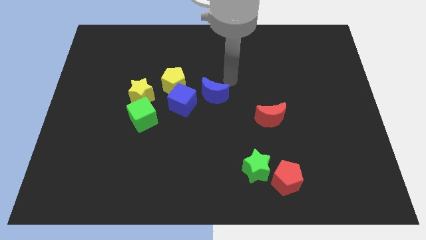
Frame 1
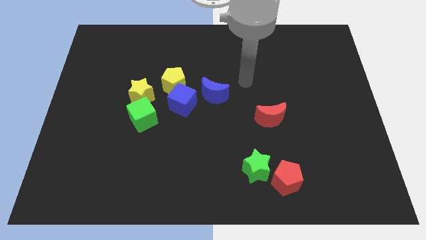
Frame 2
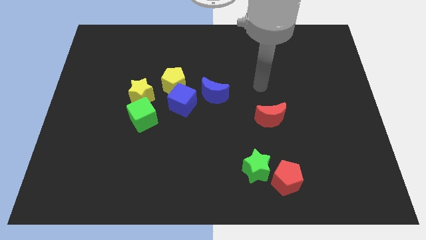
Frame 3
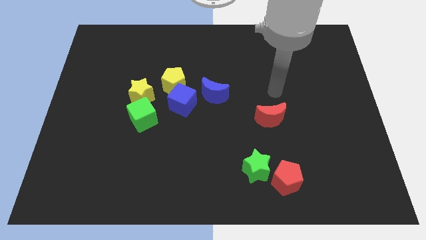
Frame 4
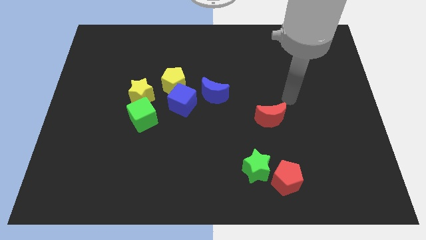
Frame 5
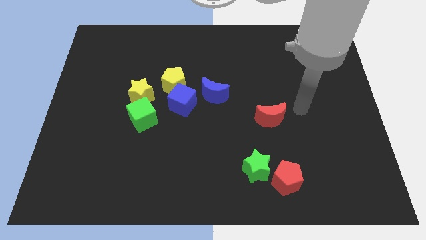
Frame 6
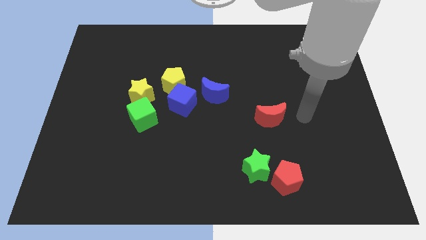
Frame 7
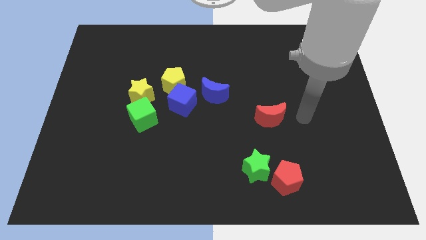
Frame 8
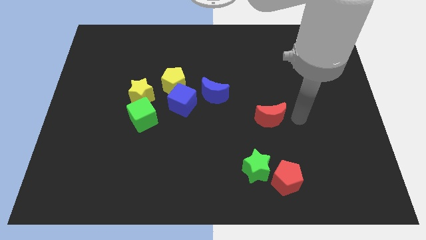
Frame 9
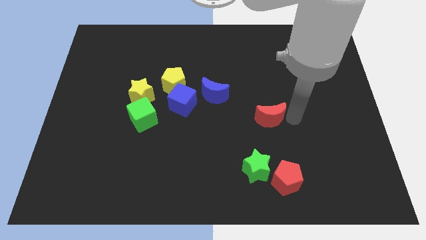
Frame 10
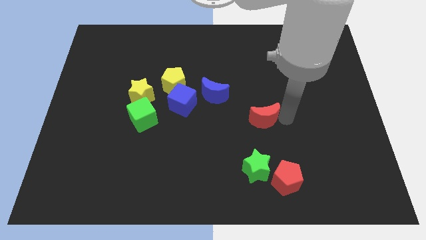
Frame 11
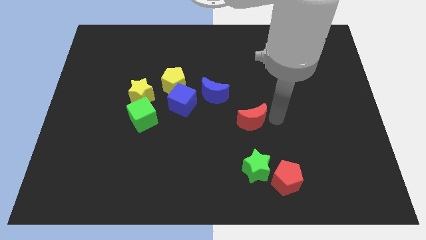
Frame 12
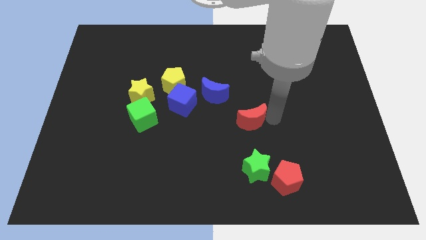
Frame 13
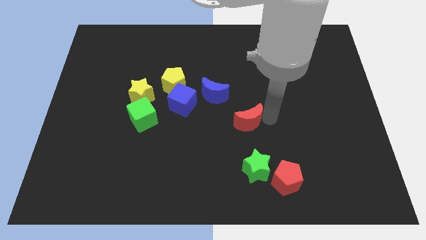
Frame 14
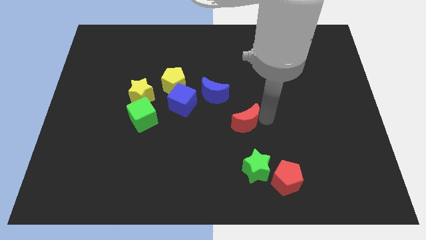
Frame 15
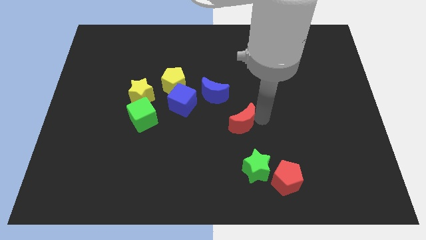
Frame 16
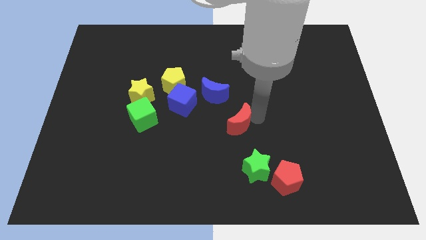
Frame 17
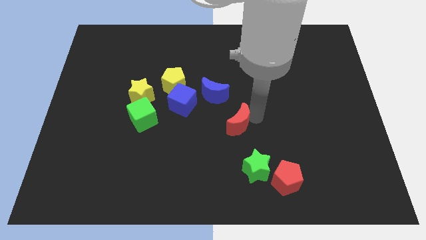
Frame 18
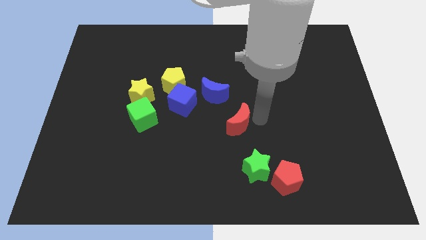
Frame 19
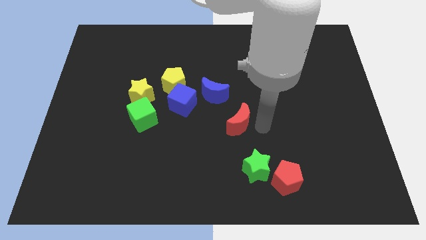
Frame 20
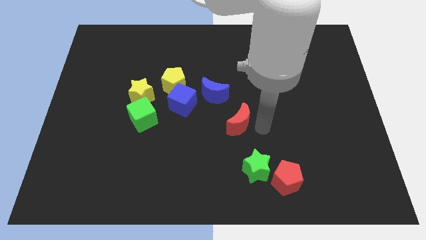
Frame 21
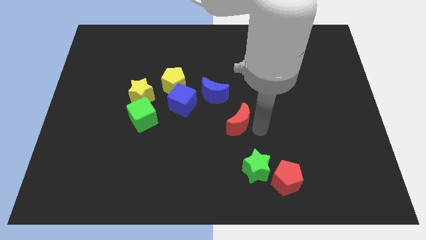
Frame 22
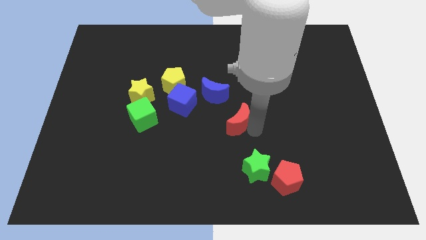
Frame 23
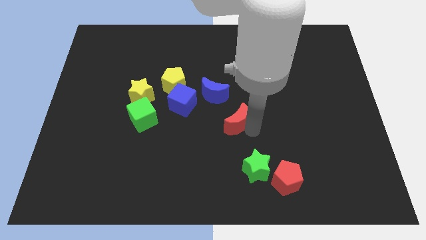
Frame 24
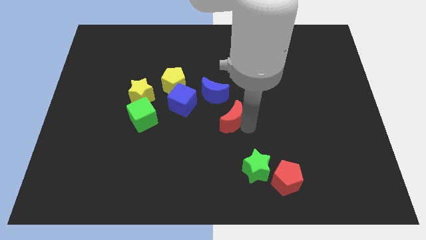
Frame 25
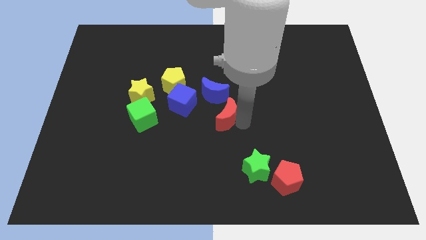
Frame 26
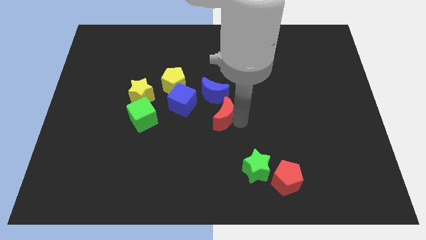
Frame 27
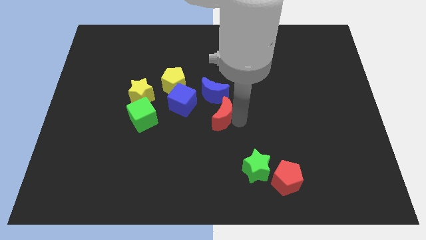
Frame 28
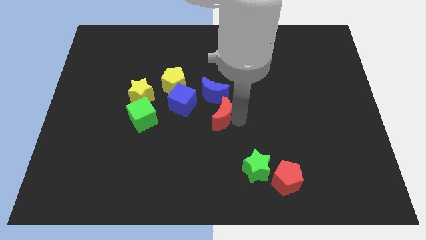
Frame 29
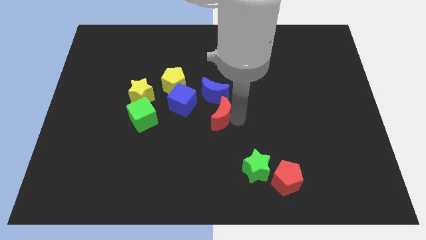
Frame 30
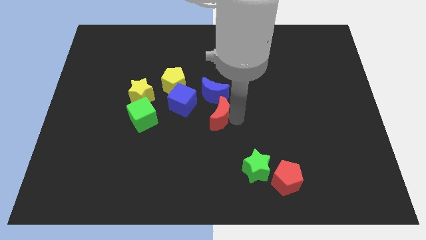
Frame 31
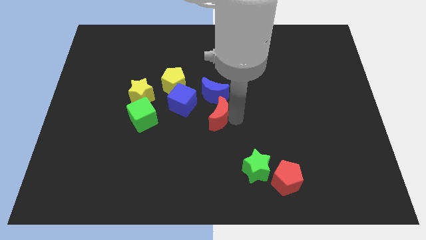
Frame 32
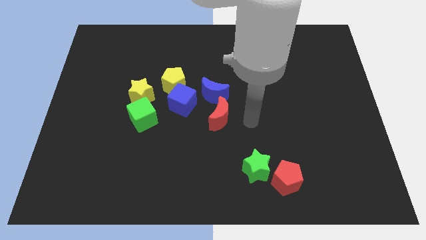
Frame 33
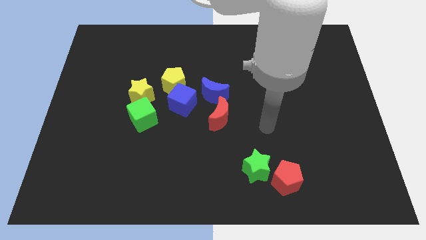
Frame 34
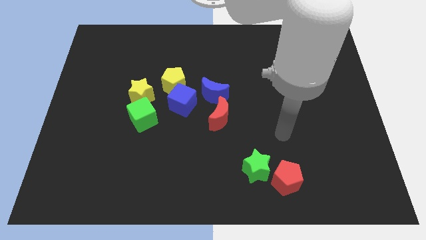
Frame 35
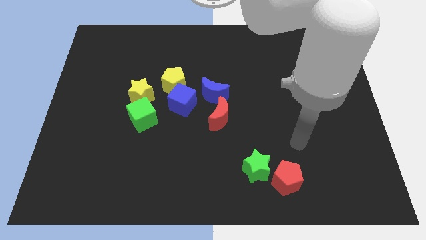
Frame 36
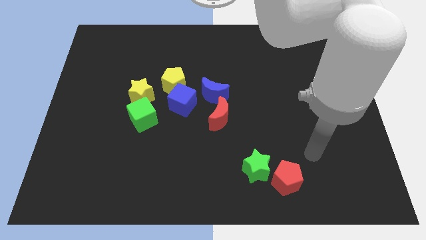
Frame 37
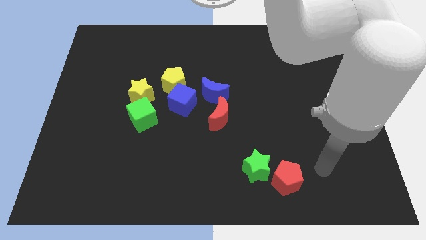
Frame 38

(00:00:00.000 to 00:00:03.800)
move the red crescent below the blue crescent

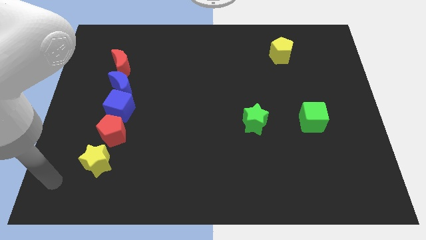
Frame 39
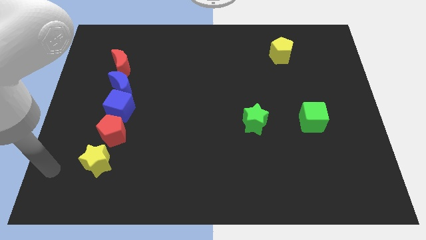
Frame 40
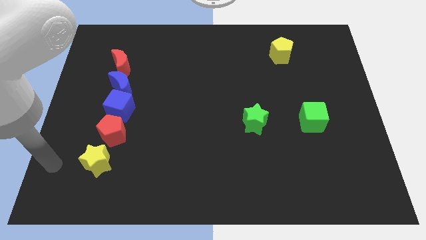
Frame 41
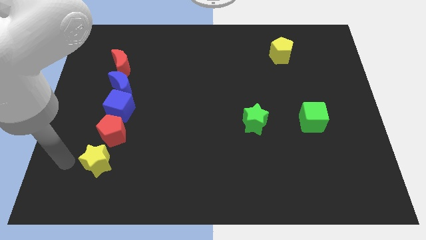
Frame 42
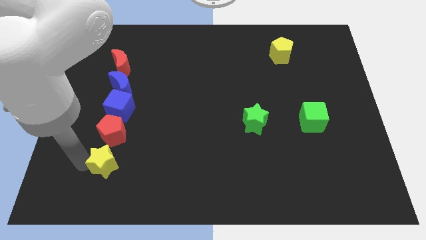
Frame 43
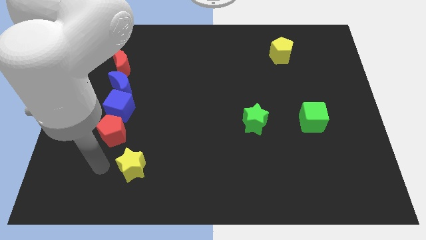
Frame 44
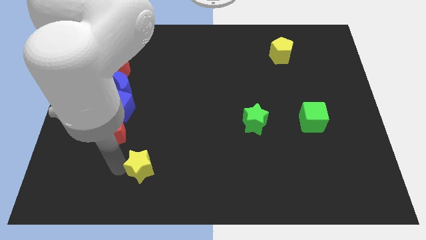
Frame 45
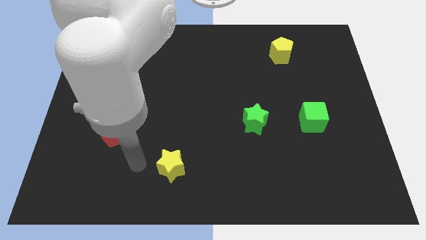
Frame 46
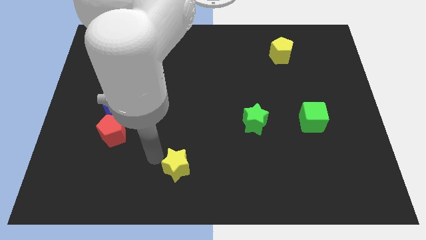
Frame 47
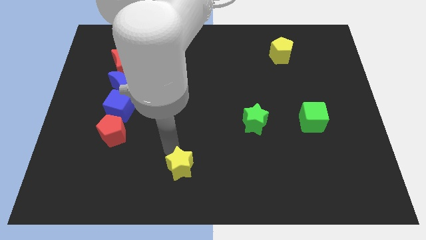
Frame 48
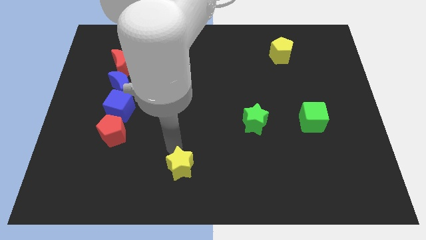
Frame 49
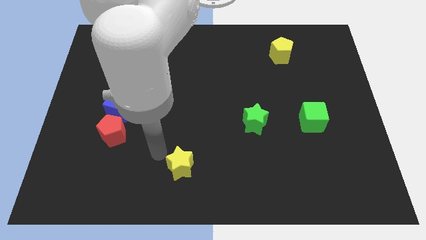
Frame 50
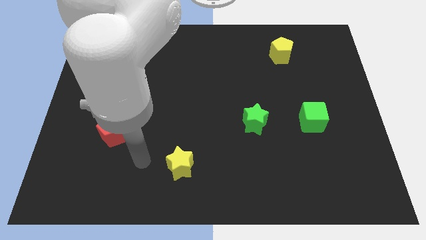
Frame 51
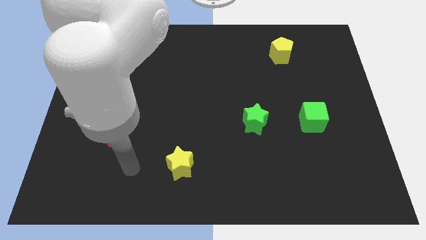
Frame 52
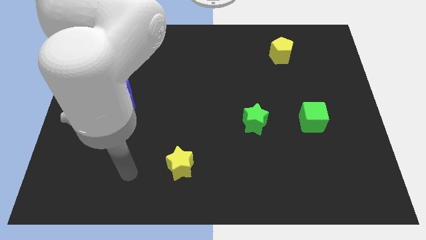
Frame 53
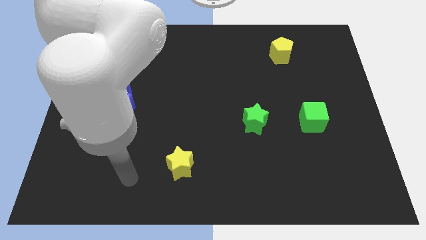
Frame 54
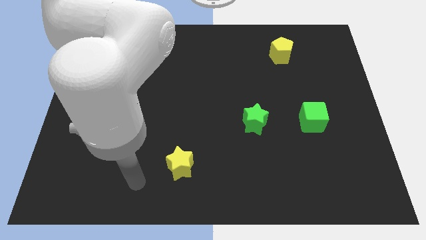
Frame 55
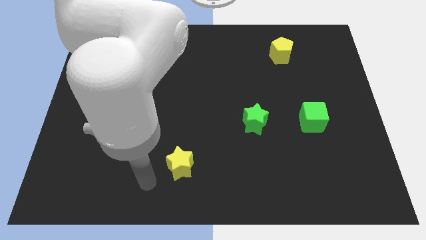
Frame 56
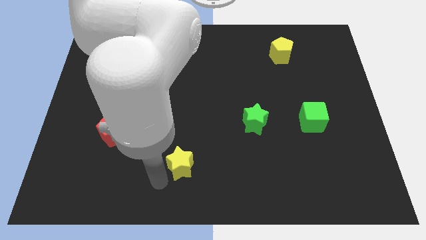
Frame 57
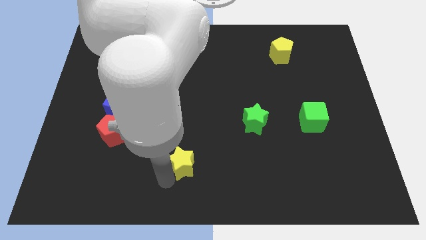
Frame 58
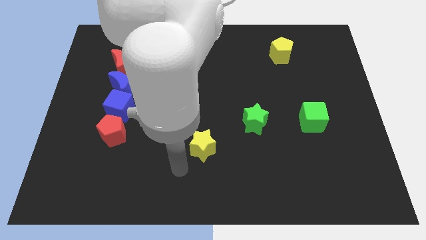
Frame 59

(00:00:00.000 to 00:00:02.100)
push the yellow star at the bottom left side of the green star

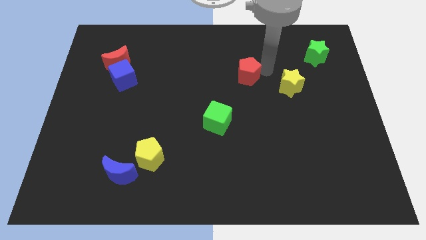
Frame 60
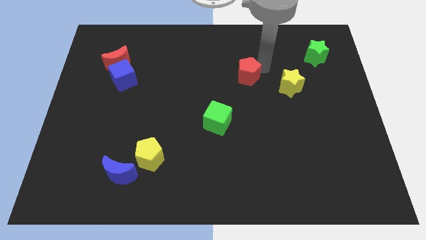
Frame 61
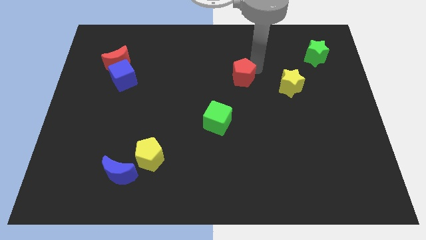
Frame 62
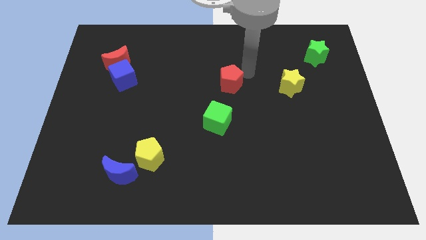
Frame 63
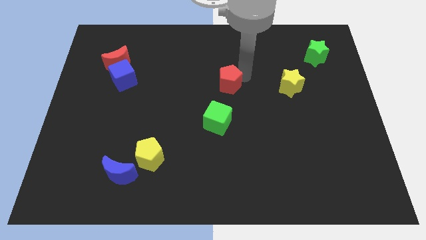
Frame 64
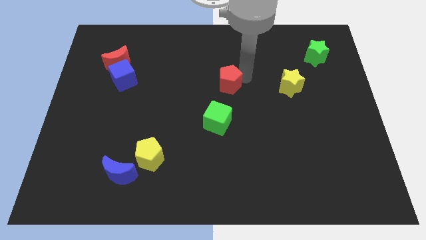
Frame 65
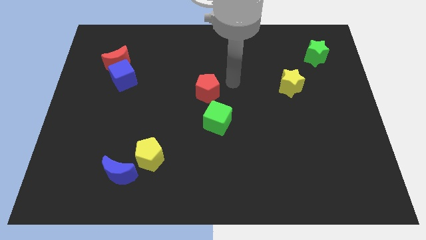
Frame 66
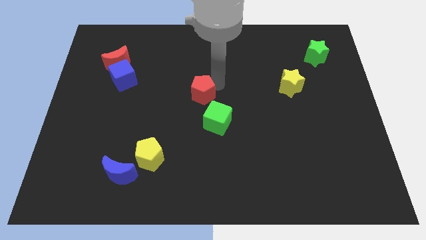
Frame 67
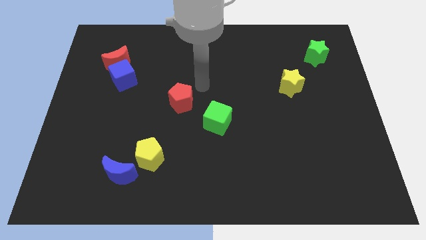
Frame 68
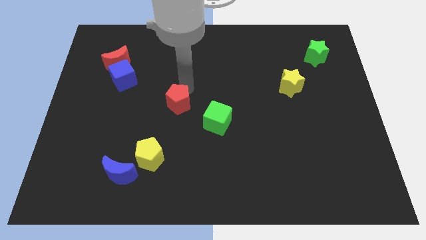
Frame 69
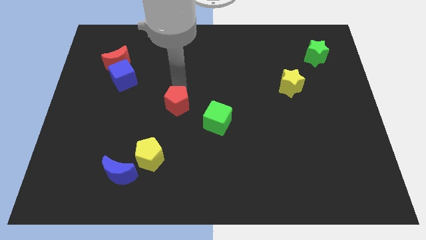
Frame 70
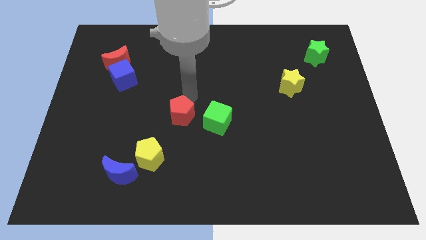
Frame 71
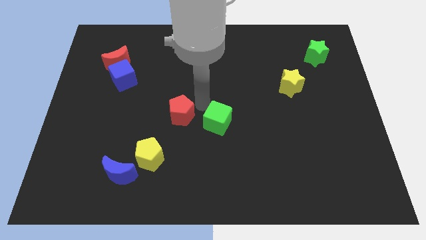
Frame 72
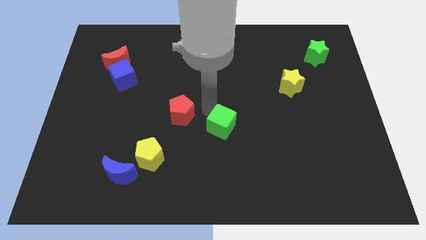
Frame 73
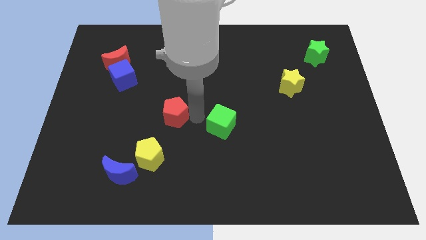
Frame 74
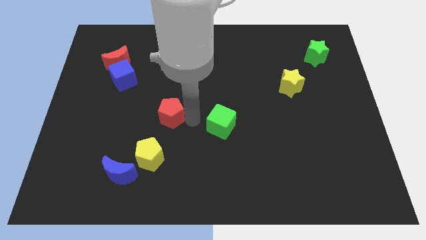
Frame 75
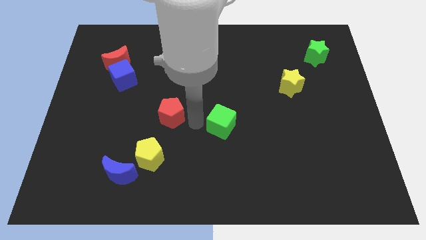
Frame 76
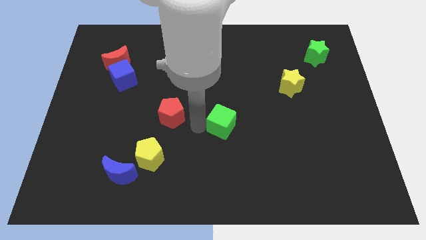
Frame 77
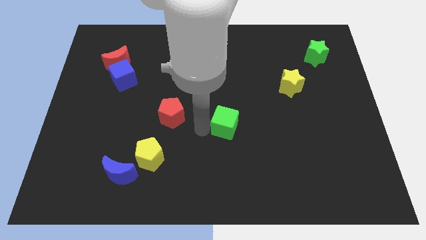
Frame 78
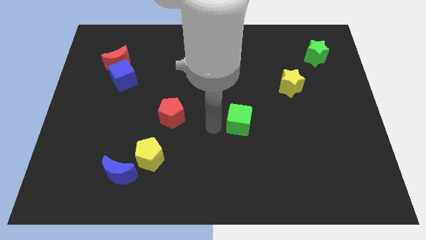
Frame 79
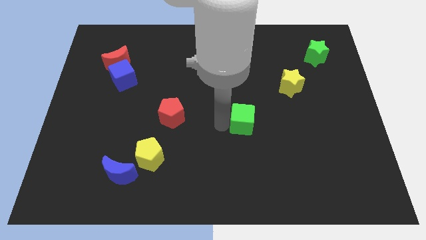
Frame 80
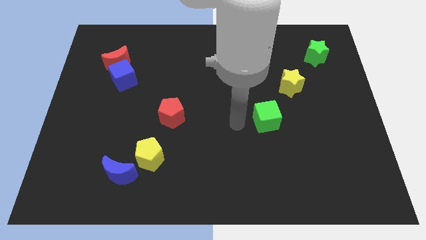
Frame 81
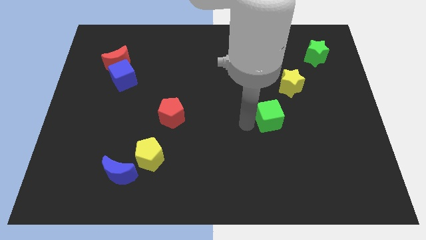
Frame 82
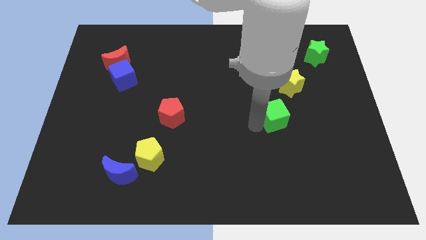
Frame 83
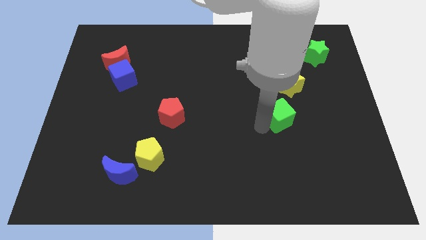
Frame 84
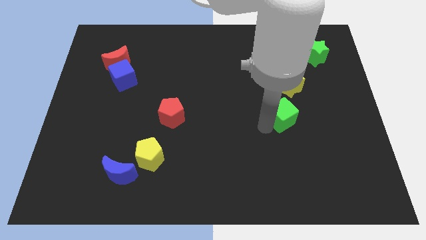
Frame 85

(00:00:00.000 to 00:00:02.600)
move the red pentagon above to the yellow pentagon

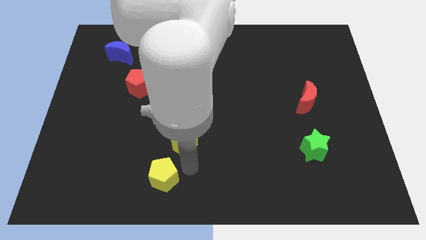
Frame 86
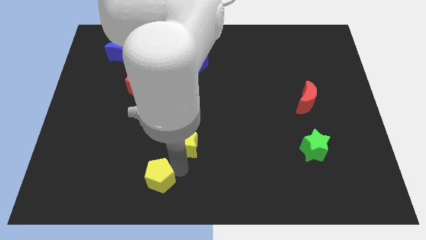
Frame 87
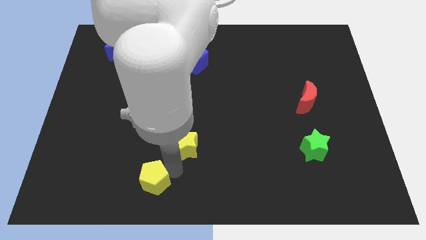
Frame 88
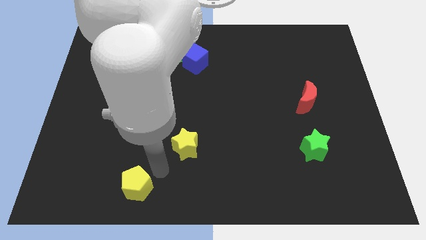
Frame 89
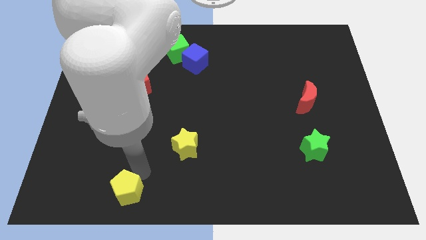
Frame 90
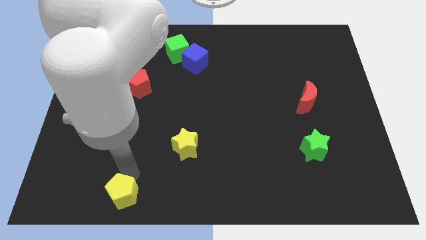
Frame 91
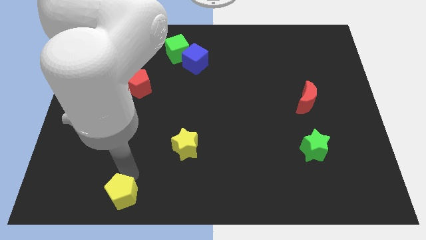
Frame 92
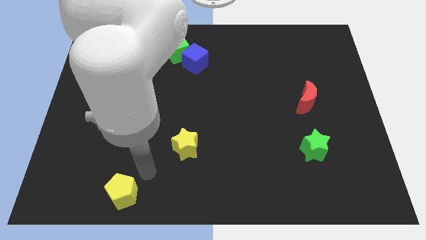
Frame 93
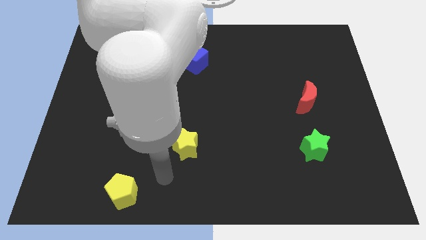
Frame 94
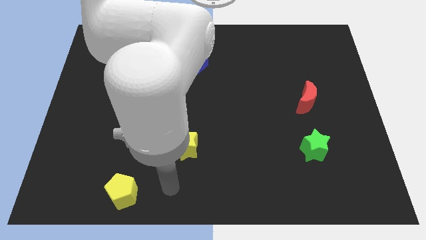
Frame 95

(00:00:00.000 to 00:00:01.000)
push the yellow pentagon away from the yellow star
